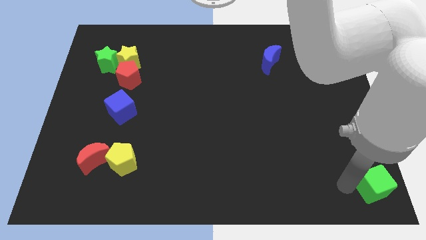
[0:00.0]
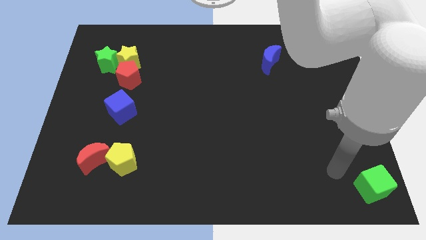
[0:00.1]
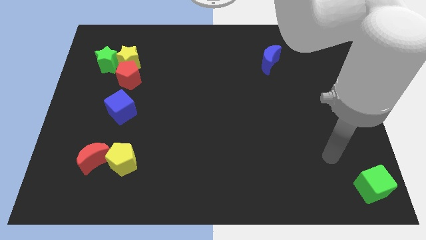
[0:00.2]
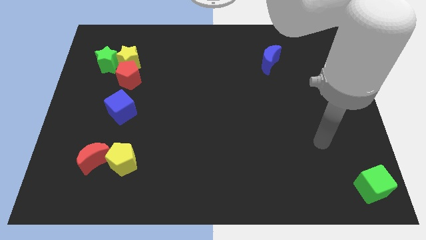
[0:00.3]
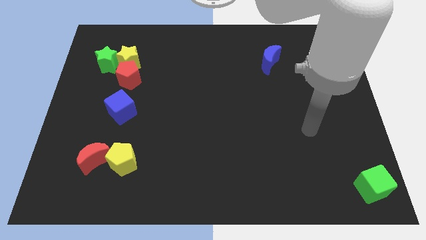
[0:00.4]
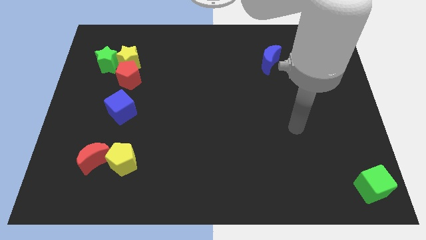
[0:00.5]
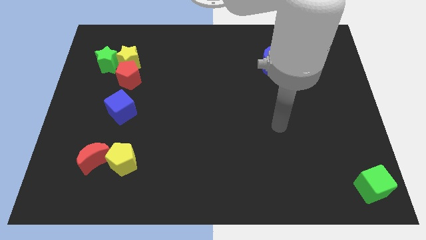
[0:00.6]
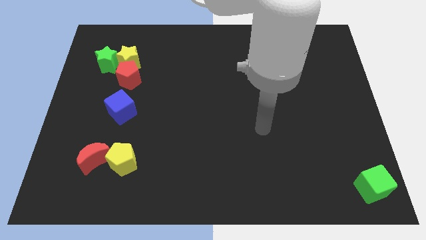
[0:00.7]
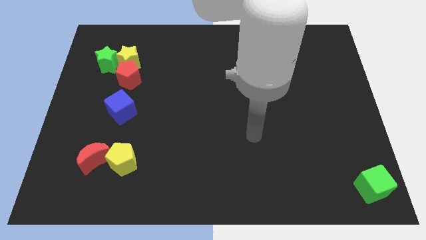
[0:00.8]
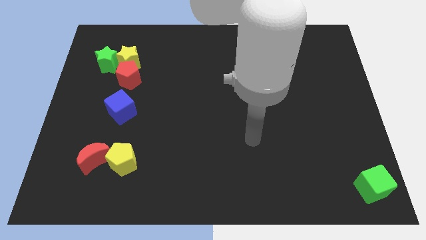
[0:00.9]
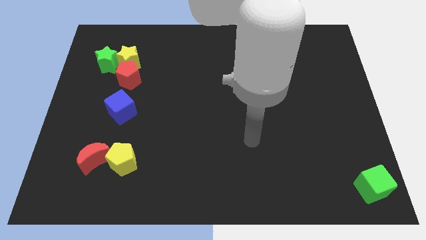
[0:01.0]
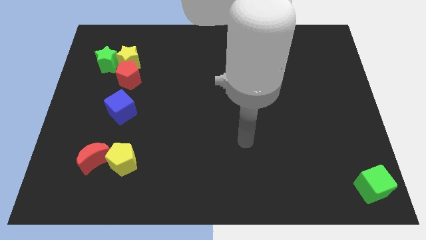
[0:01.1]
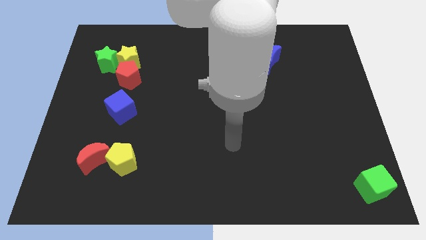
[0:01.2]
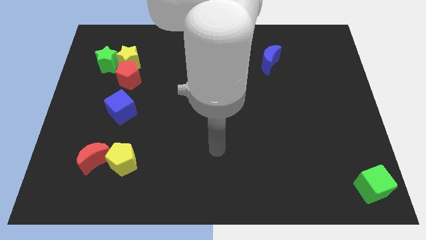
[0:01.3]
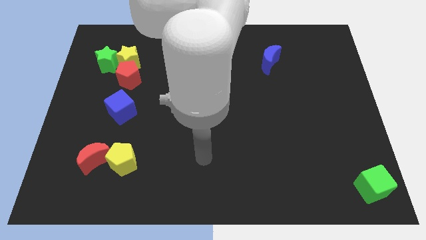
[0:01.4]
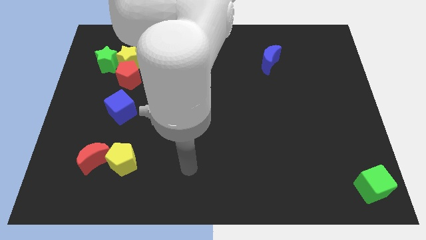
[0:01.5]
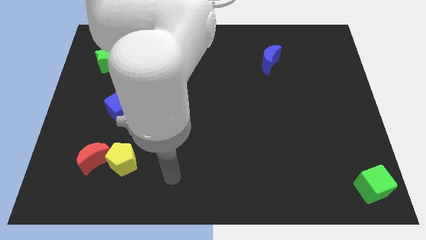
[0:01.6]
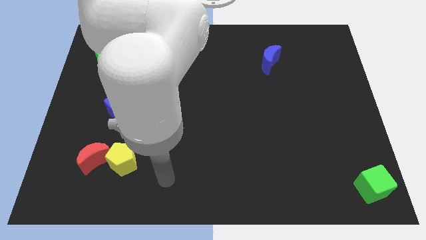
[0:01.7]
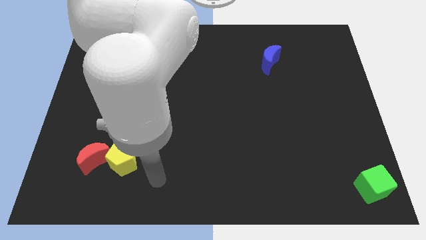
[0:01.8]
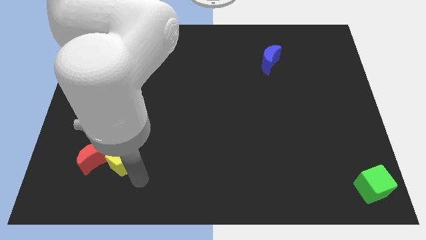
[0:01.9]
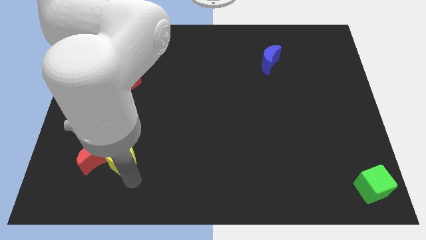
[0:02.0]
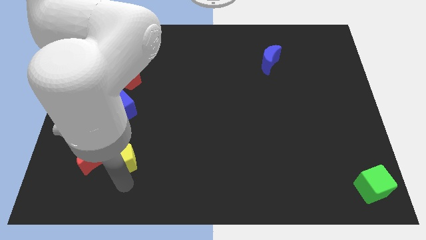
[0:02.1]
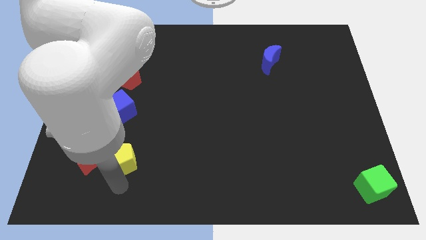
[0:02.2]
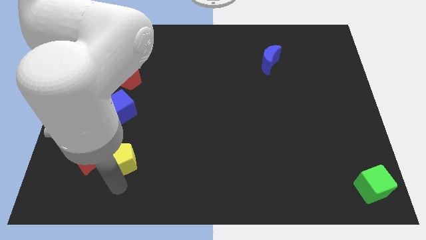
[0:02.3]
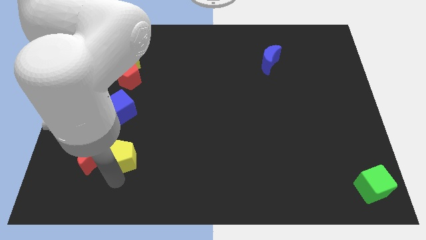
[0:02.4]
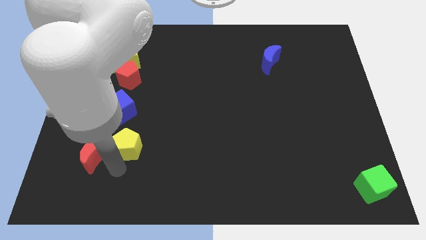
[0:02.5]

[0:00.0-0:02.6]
touch the bottom side of the yellow pentagon

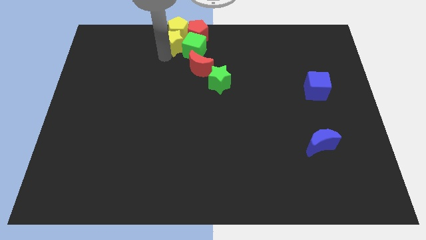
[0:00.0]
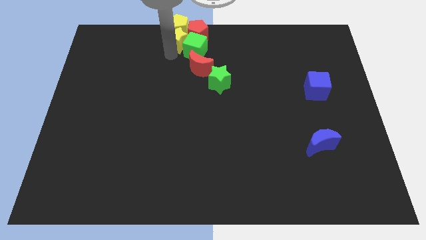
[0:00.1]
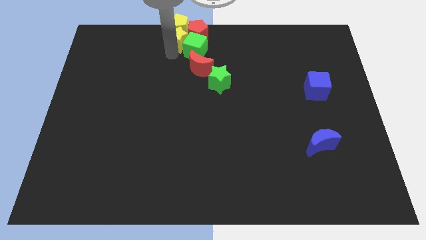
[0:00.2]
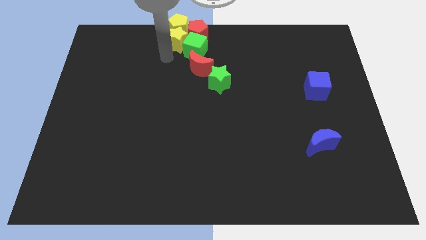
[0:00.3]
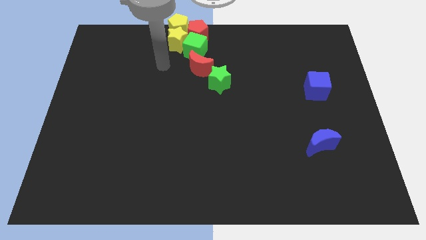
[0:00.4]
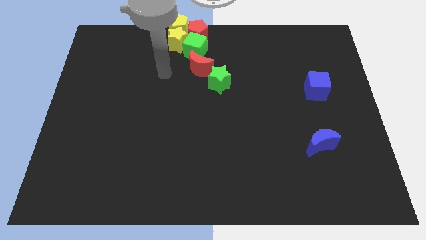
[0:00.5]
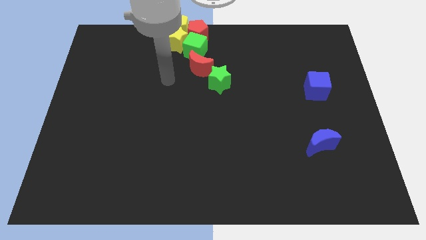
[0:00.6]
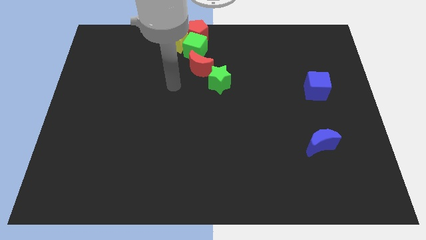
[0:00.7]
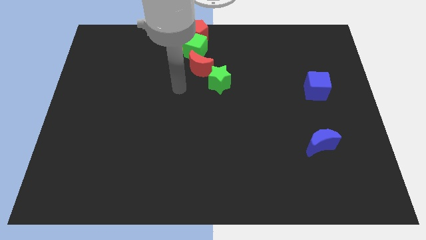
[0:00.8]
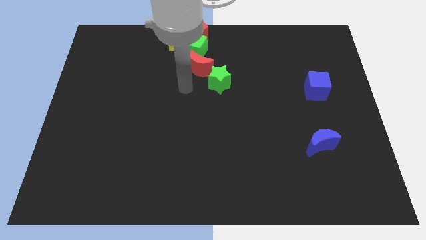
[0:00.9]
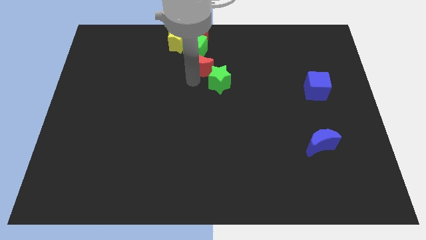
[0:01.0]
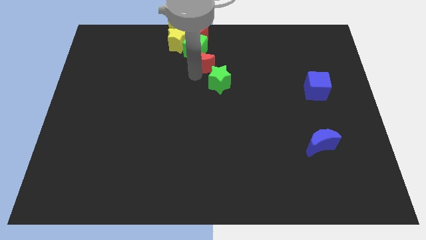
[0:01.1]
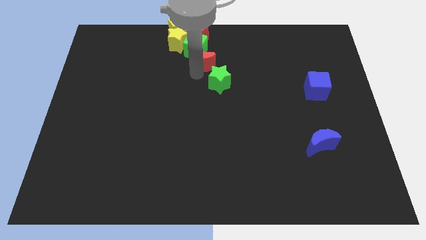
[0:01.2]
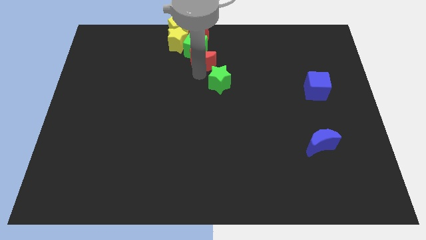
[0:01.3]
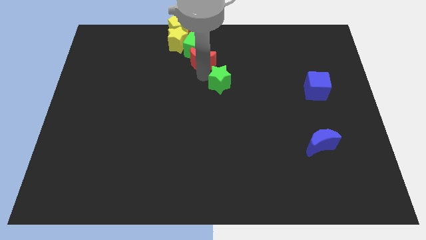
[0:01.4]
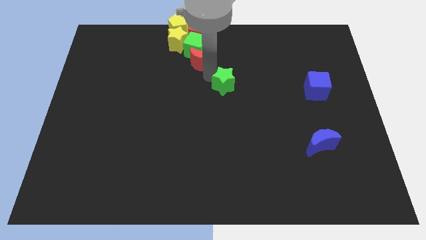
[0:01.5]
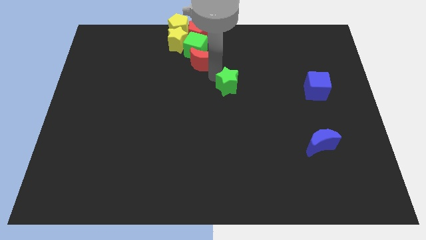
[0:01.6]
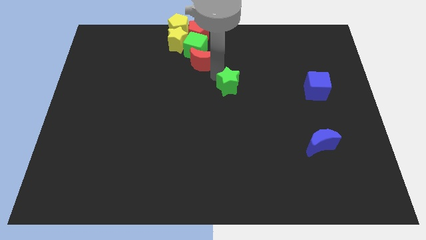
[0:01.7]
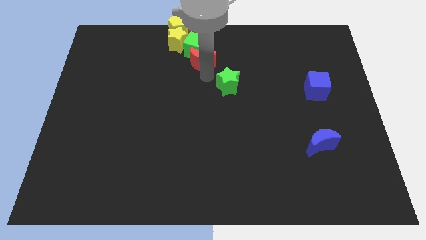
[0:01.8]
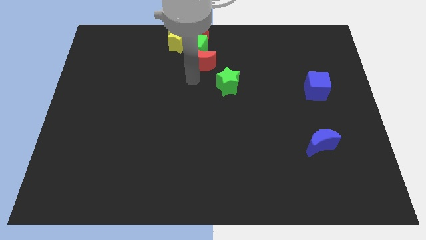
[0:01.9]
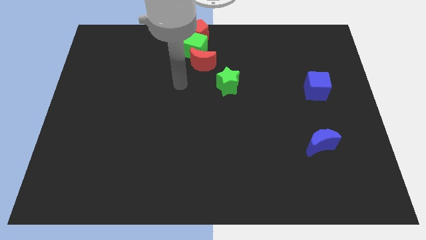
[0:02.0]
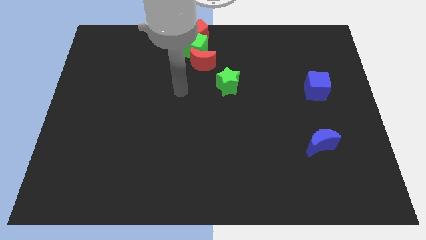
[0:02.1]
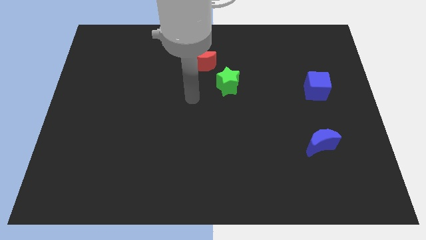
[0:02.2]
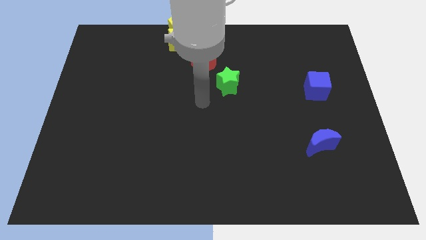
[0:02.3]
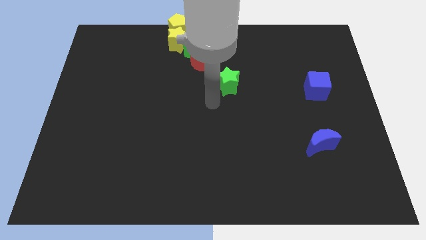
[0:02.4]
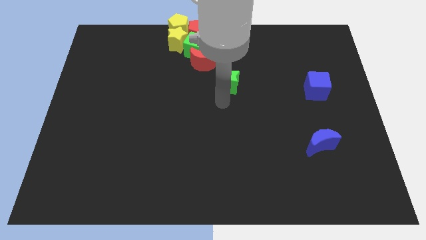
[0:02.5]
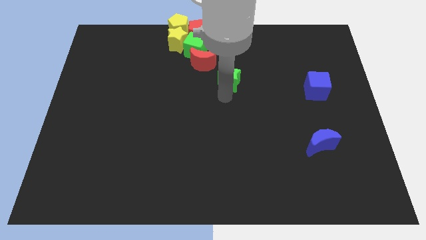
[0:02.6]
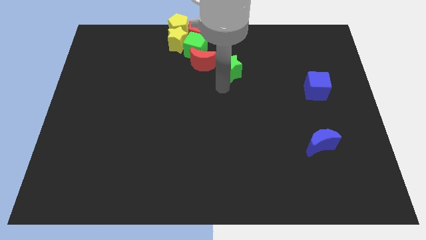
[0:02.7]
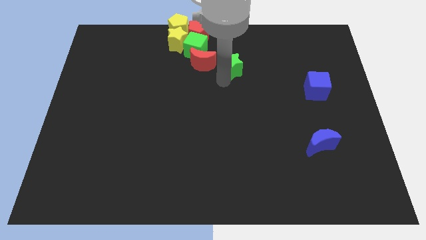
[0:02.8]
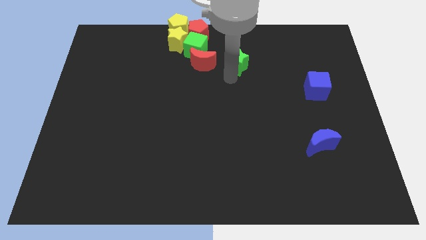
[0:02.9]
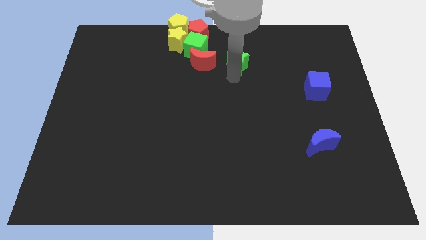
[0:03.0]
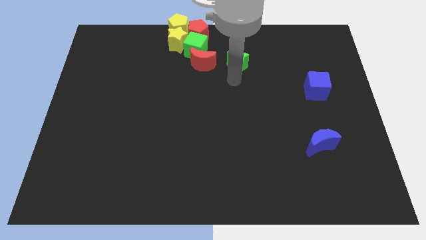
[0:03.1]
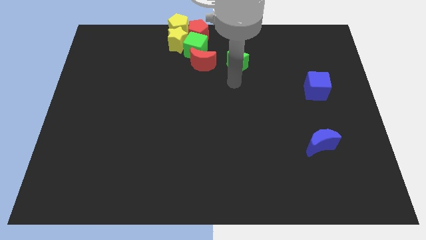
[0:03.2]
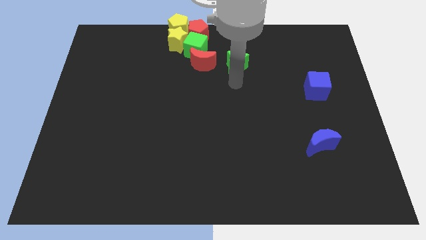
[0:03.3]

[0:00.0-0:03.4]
slightly push the red crescent towards the green cube

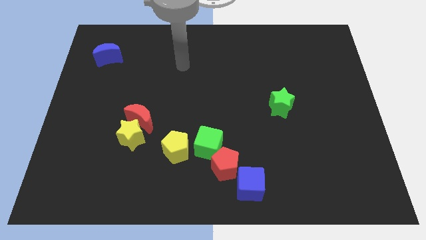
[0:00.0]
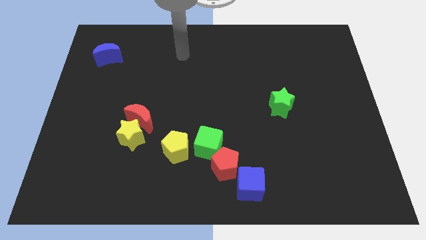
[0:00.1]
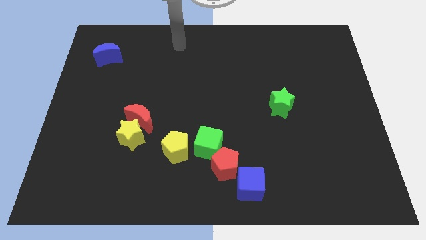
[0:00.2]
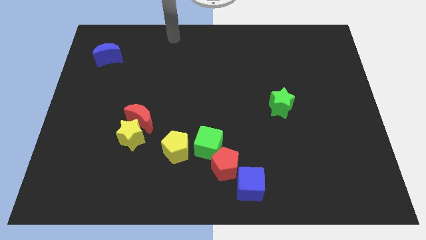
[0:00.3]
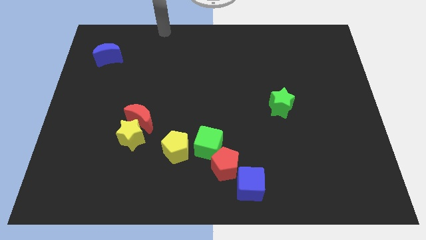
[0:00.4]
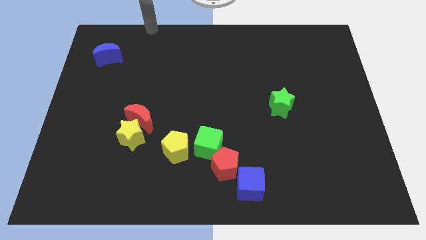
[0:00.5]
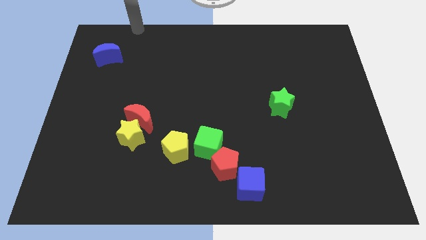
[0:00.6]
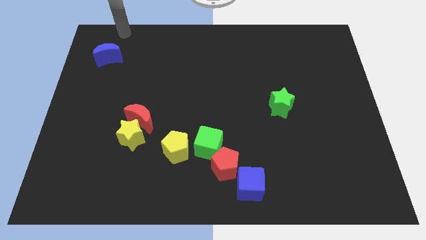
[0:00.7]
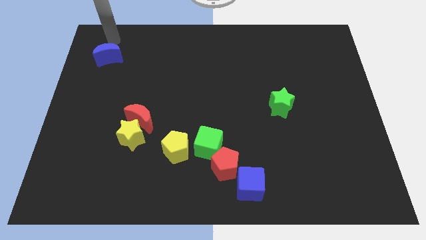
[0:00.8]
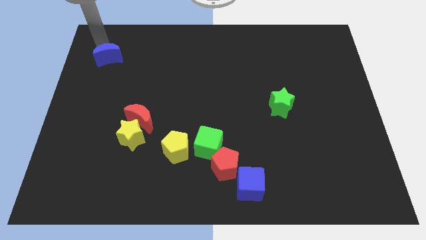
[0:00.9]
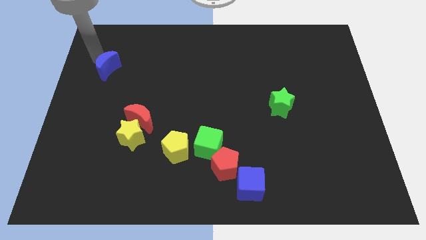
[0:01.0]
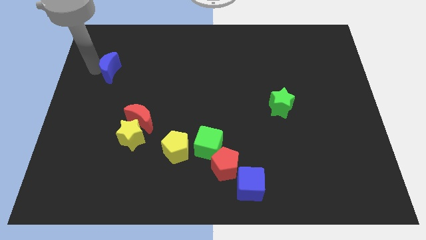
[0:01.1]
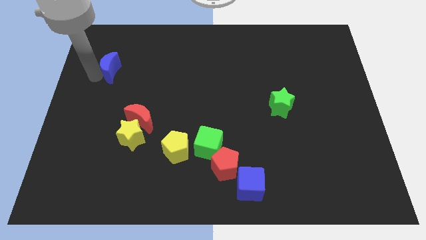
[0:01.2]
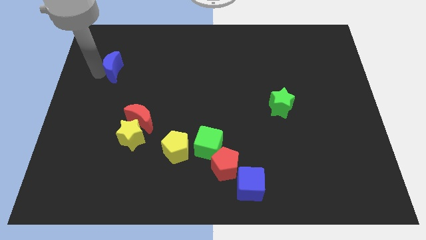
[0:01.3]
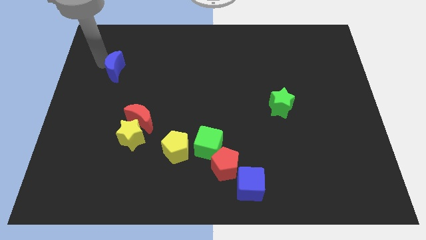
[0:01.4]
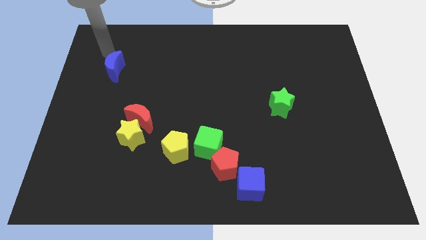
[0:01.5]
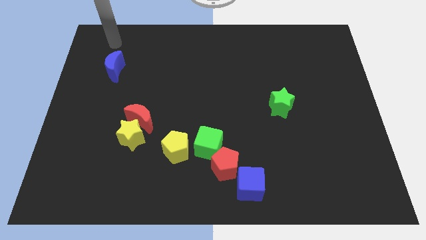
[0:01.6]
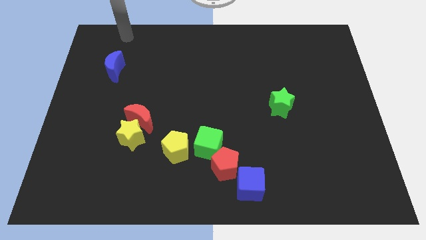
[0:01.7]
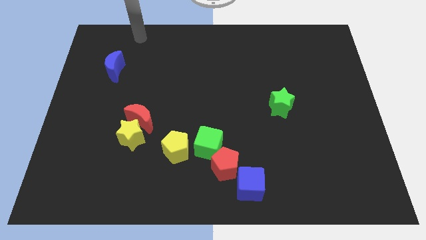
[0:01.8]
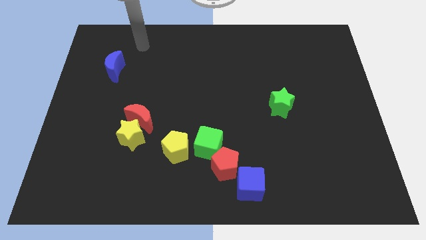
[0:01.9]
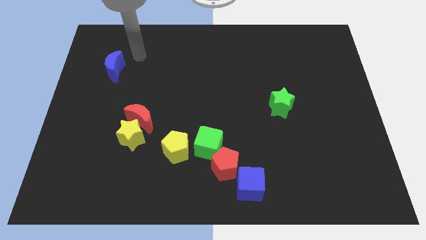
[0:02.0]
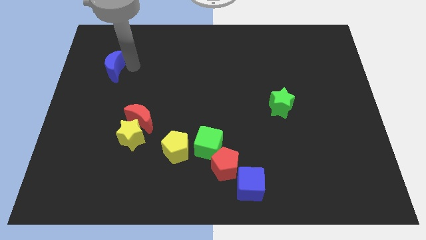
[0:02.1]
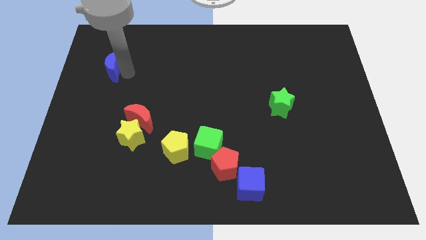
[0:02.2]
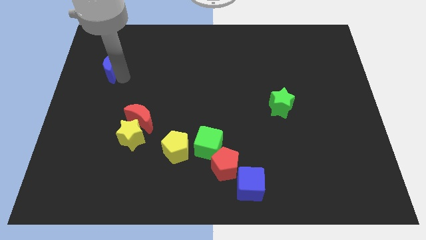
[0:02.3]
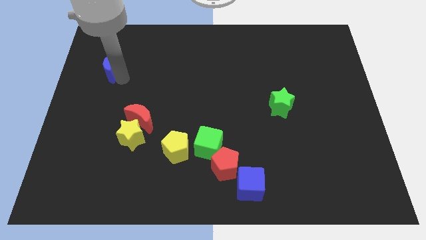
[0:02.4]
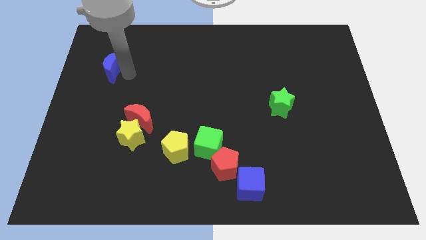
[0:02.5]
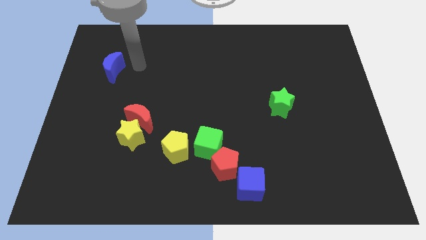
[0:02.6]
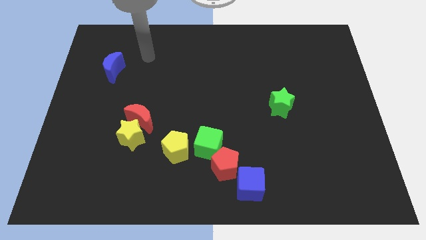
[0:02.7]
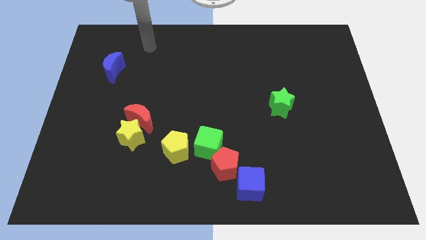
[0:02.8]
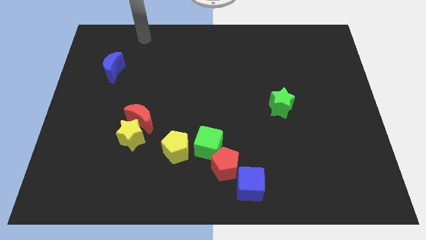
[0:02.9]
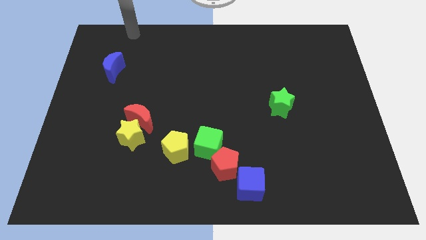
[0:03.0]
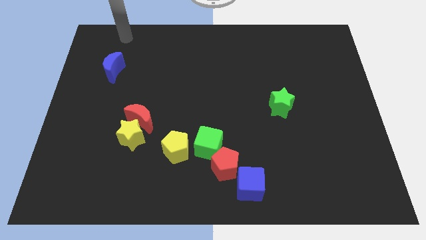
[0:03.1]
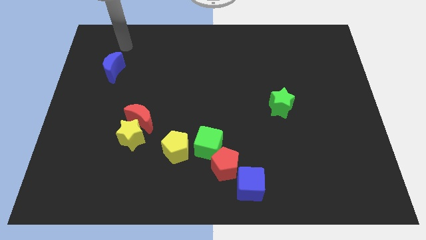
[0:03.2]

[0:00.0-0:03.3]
place your arm above the blue moon
